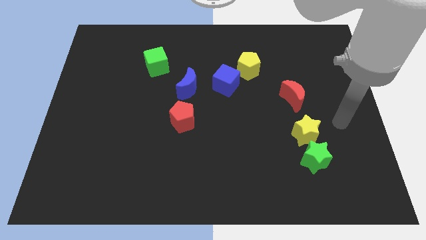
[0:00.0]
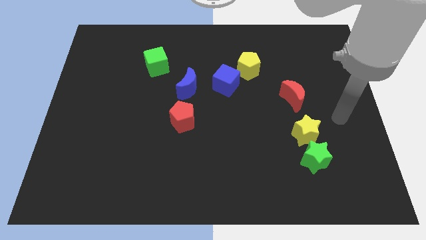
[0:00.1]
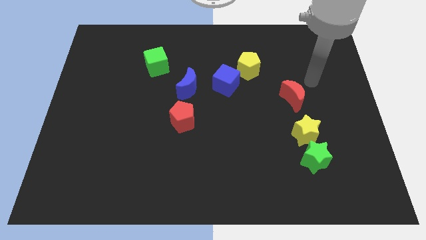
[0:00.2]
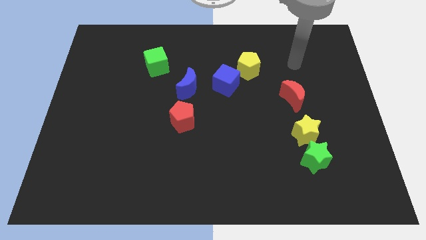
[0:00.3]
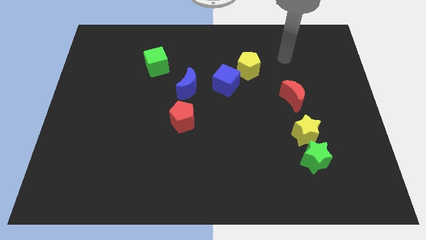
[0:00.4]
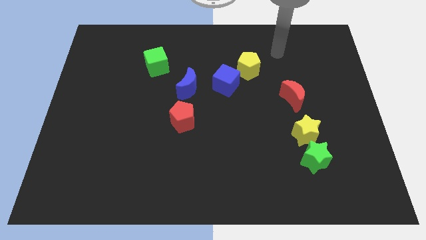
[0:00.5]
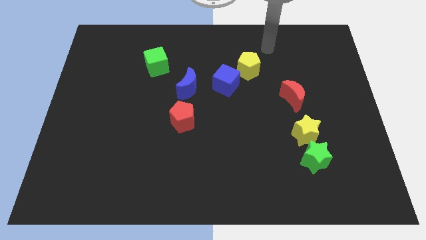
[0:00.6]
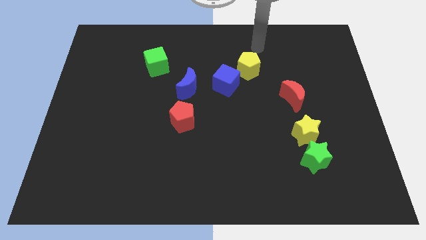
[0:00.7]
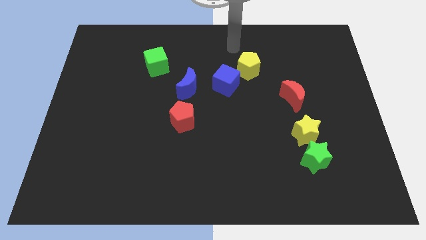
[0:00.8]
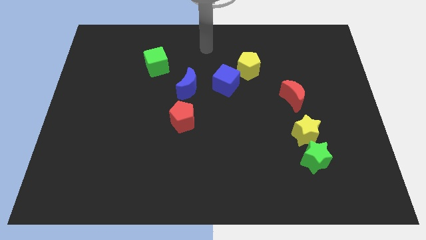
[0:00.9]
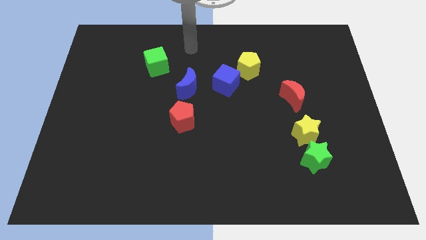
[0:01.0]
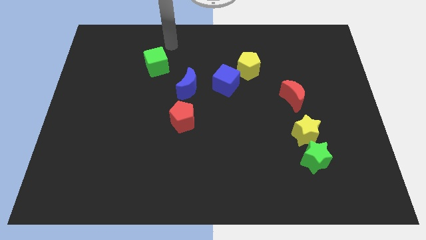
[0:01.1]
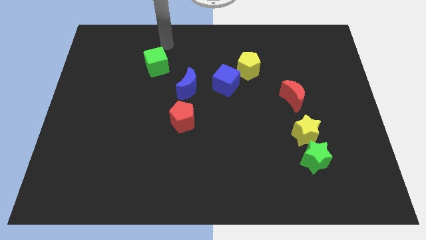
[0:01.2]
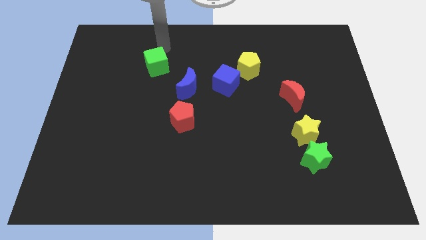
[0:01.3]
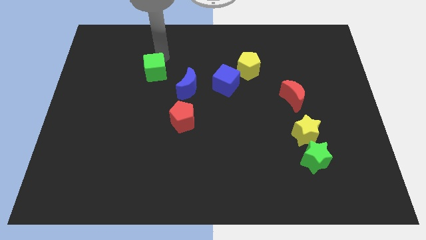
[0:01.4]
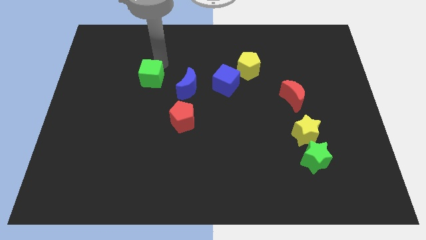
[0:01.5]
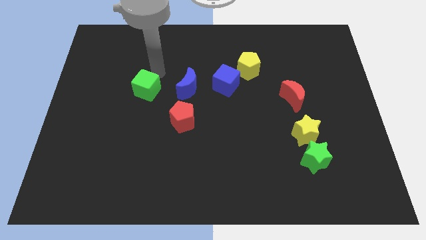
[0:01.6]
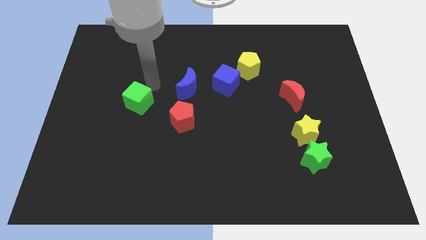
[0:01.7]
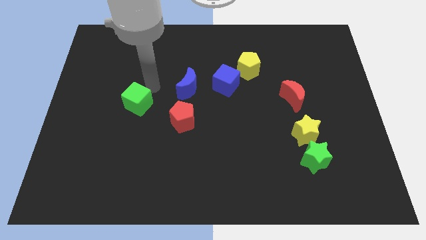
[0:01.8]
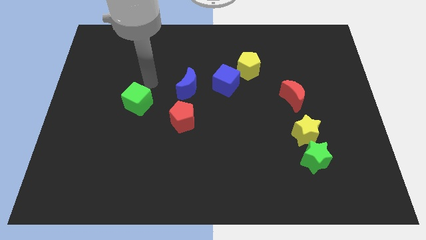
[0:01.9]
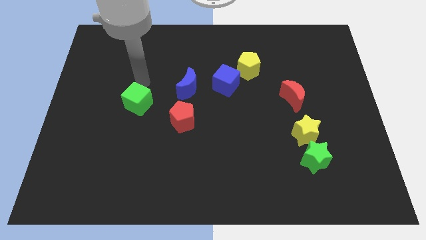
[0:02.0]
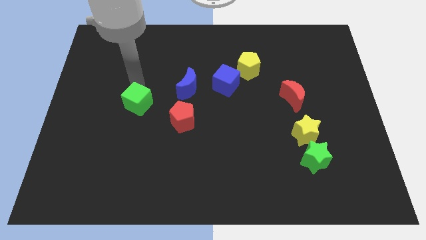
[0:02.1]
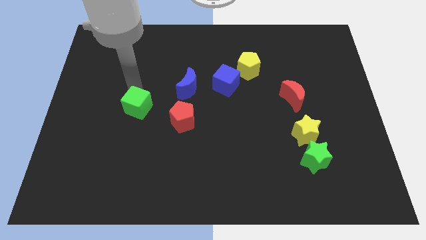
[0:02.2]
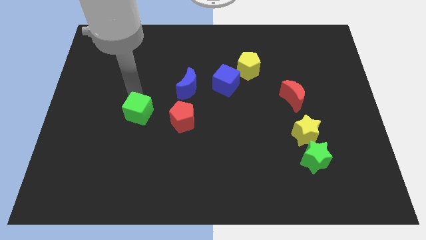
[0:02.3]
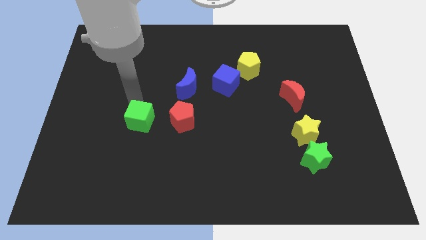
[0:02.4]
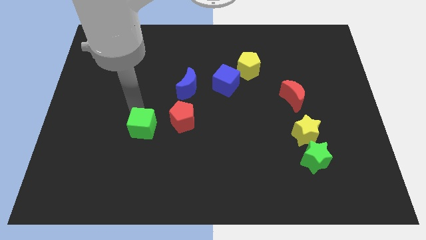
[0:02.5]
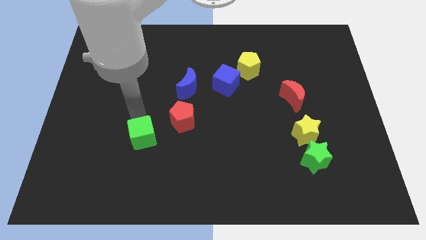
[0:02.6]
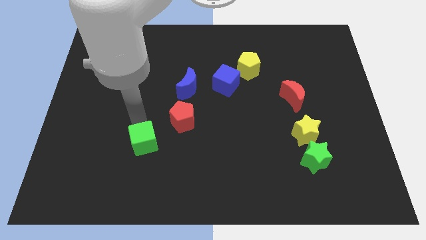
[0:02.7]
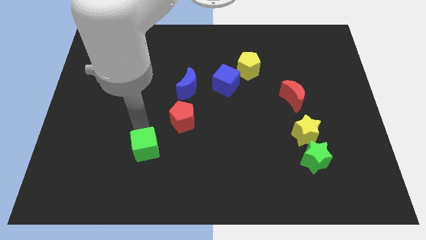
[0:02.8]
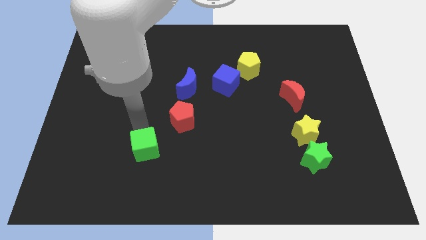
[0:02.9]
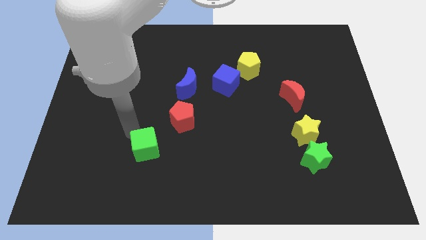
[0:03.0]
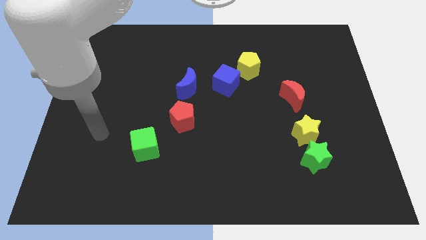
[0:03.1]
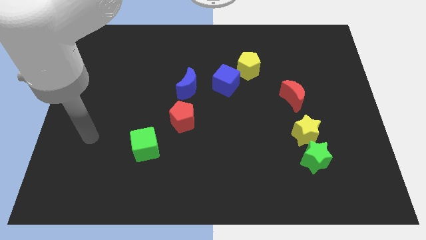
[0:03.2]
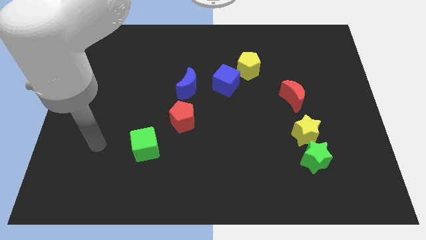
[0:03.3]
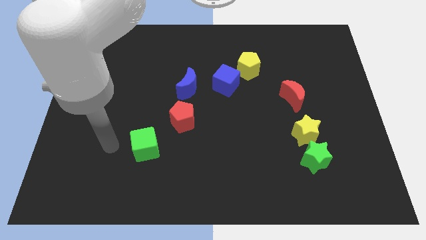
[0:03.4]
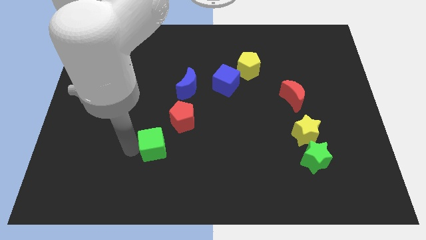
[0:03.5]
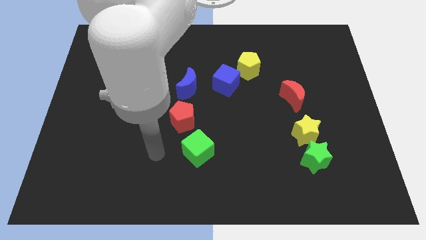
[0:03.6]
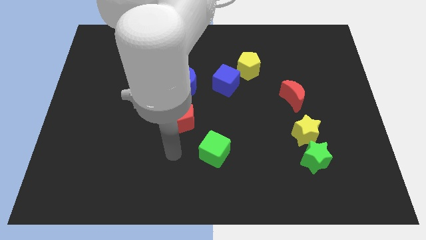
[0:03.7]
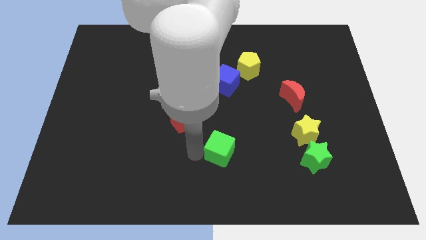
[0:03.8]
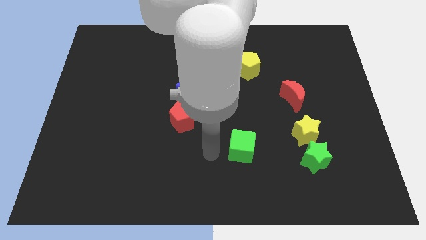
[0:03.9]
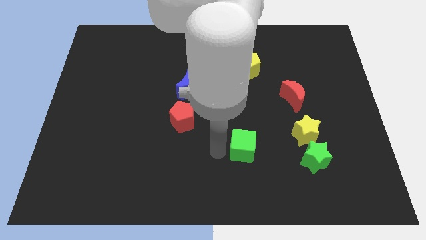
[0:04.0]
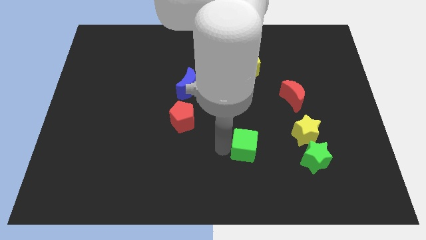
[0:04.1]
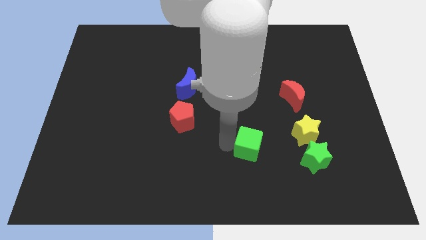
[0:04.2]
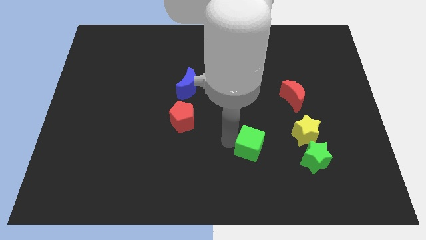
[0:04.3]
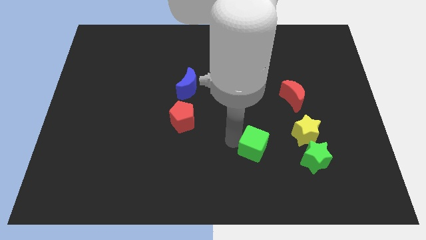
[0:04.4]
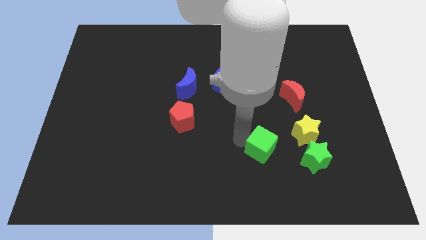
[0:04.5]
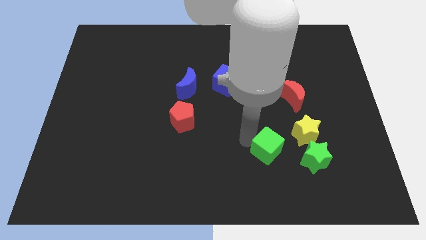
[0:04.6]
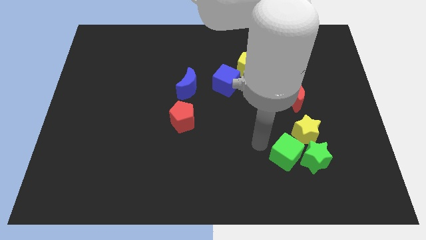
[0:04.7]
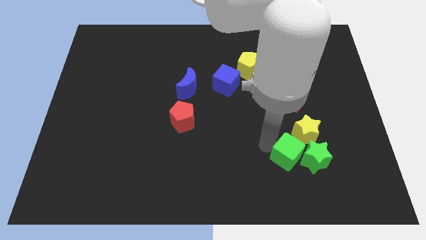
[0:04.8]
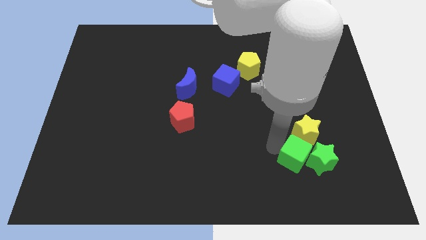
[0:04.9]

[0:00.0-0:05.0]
slide the green cube towards the green star

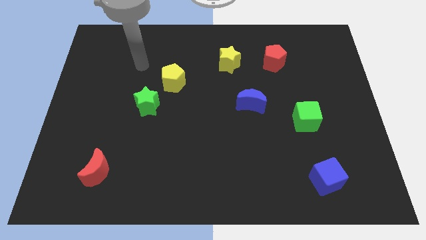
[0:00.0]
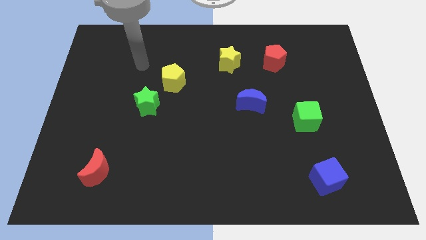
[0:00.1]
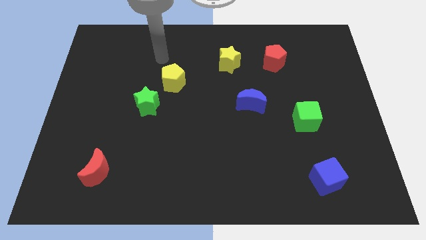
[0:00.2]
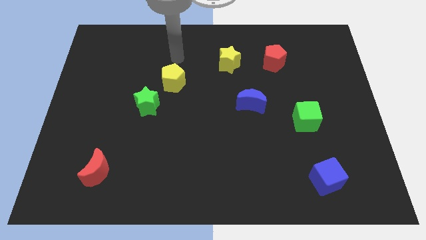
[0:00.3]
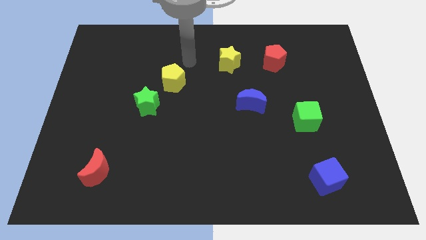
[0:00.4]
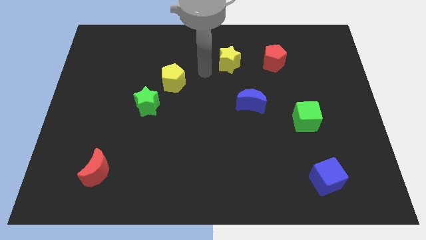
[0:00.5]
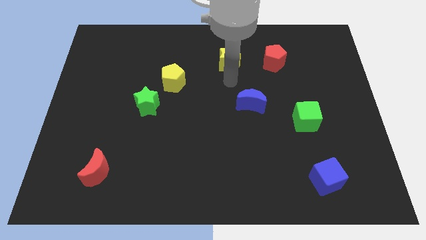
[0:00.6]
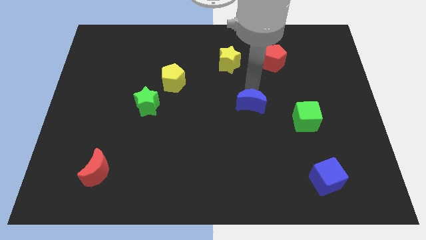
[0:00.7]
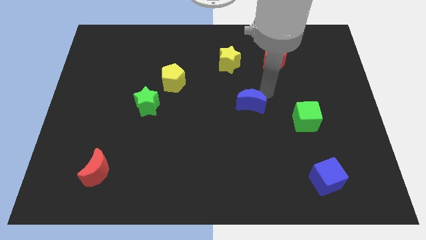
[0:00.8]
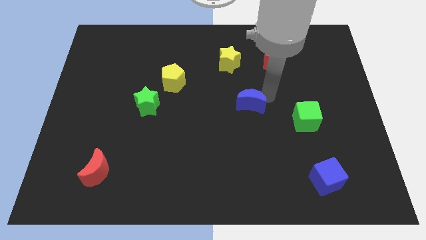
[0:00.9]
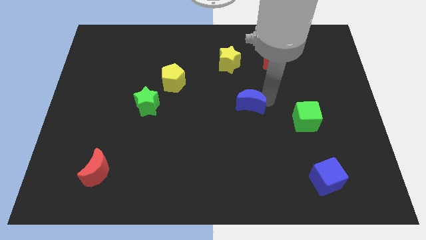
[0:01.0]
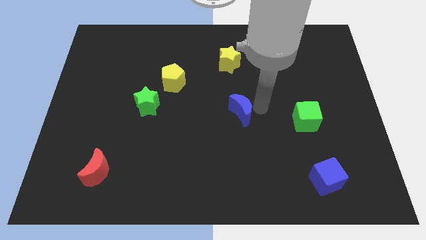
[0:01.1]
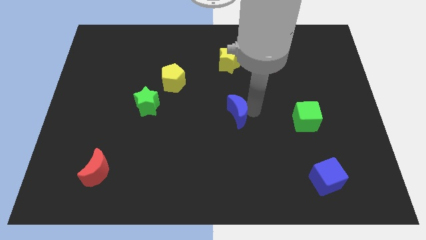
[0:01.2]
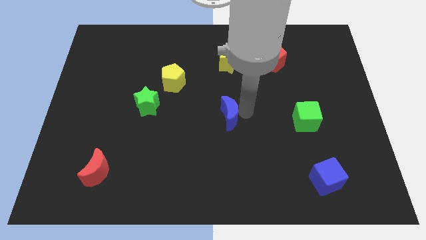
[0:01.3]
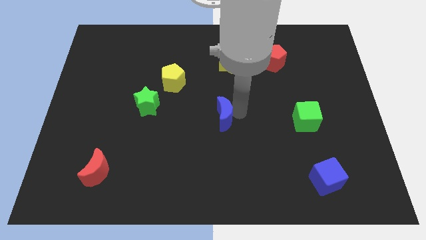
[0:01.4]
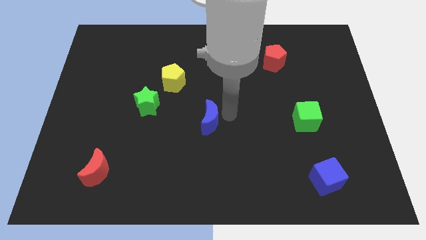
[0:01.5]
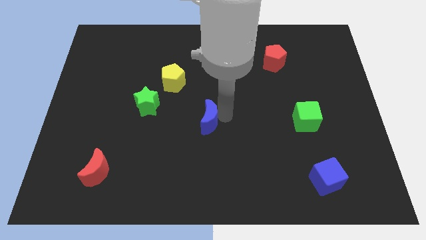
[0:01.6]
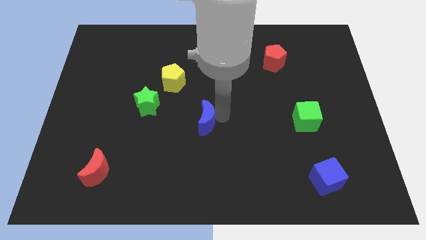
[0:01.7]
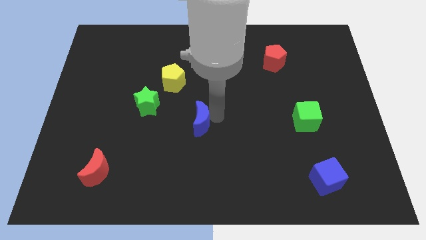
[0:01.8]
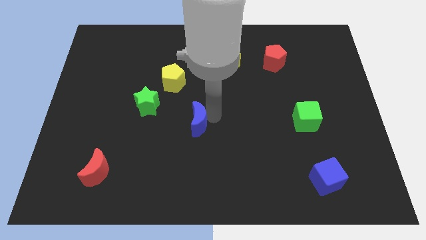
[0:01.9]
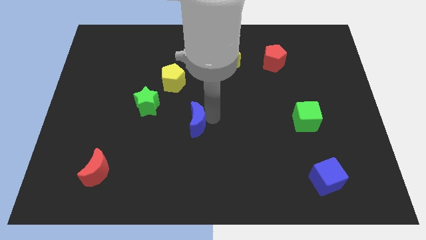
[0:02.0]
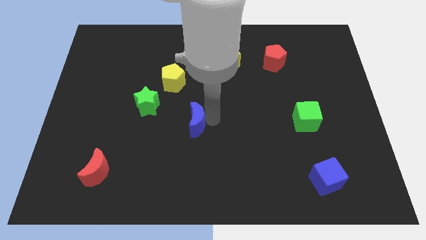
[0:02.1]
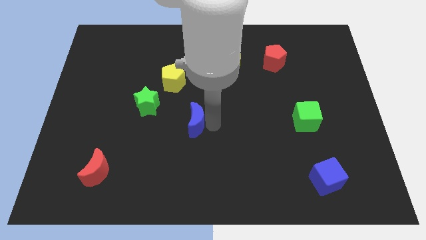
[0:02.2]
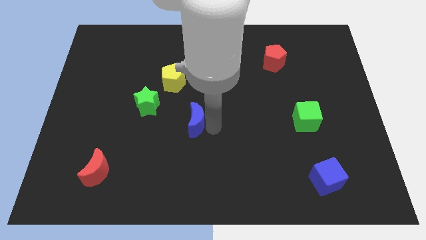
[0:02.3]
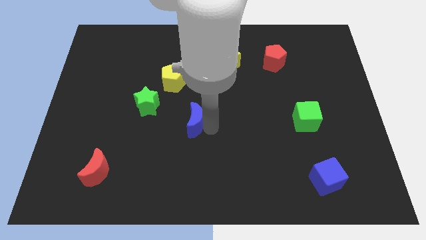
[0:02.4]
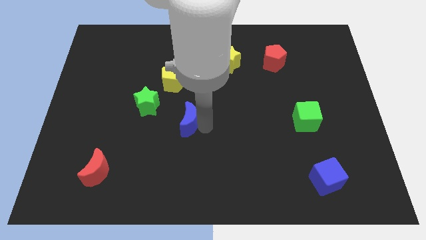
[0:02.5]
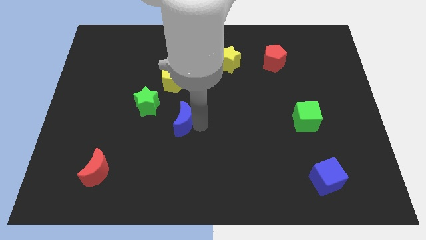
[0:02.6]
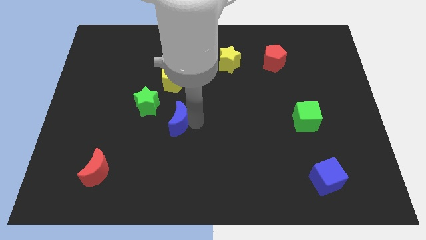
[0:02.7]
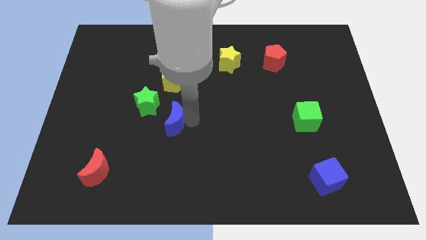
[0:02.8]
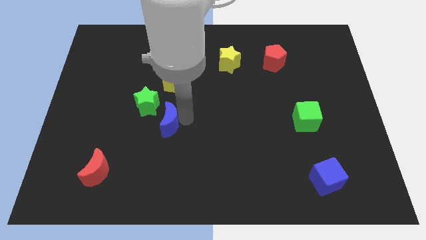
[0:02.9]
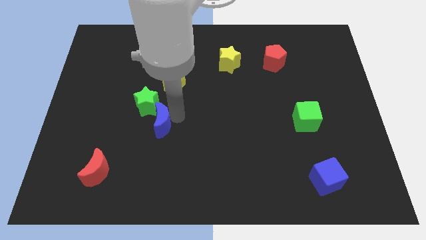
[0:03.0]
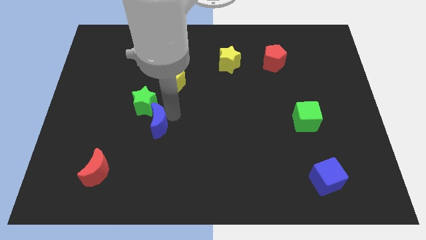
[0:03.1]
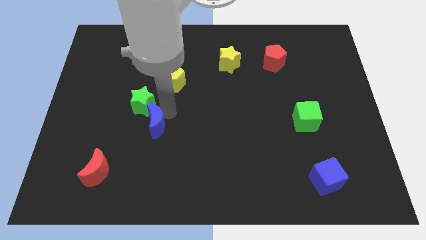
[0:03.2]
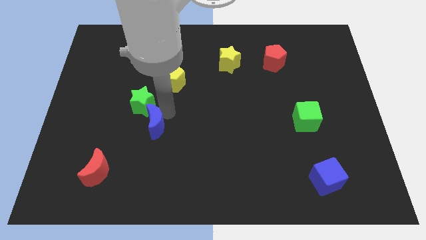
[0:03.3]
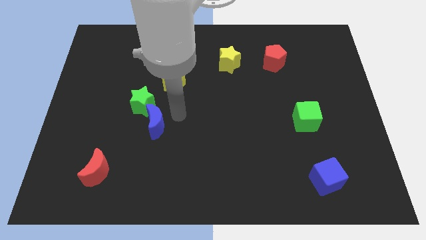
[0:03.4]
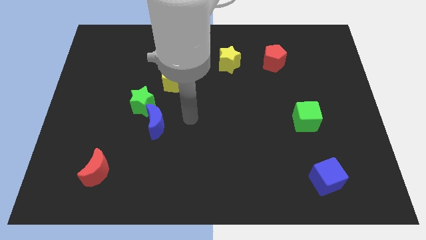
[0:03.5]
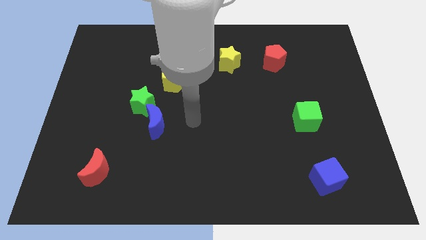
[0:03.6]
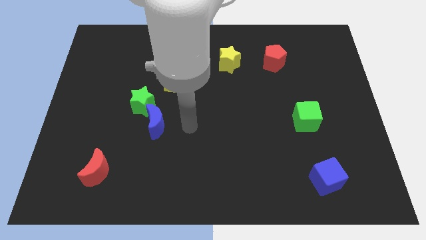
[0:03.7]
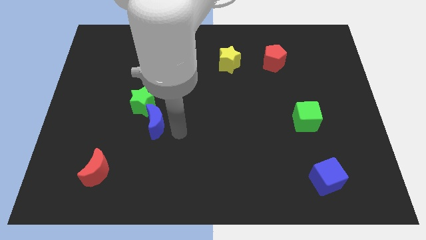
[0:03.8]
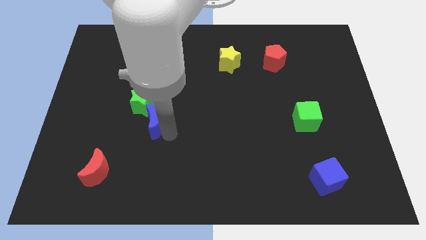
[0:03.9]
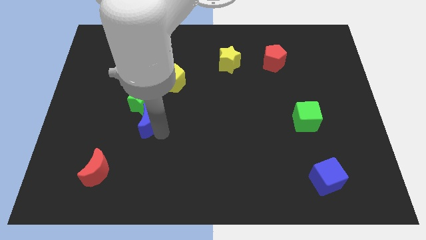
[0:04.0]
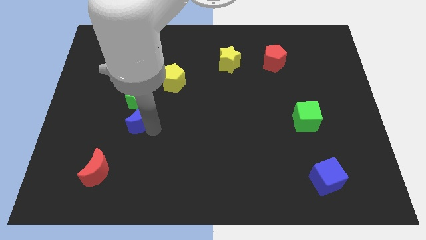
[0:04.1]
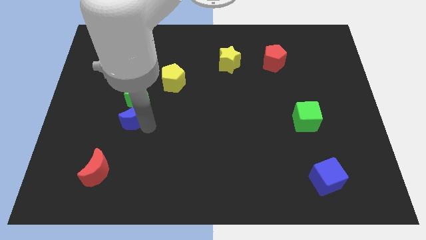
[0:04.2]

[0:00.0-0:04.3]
push the blue moon towards the green star
